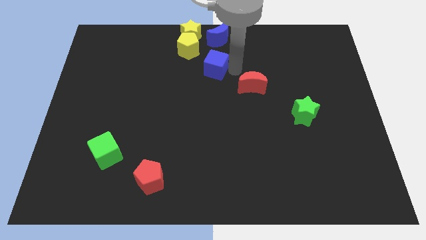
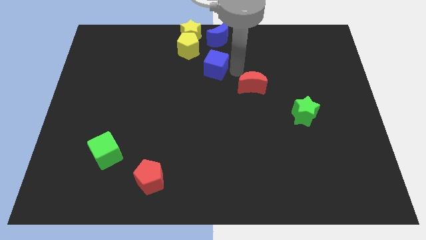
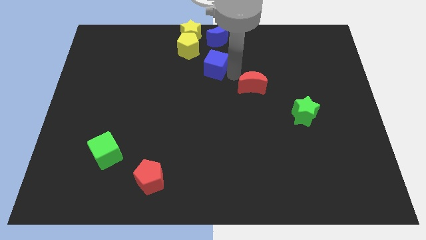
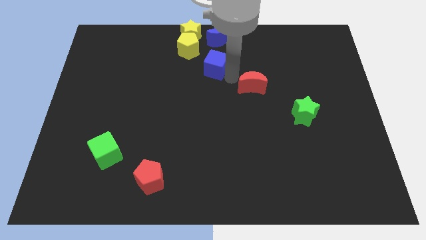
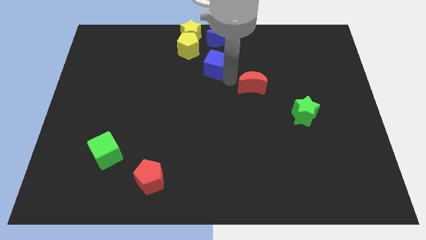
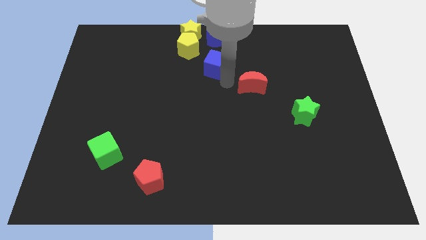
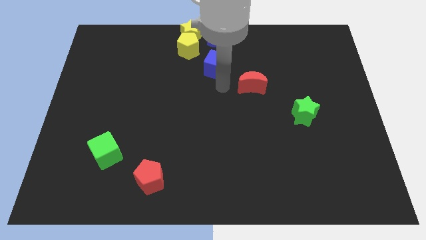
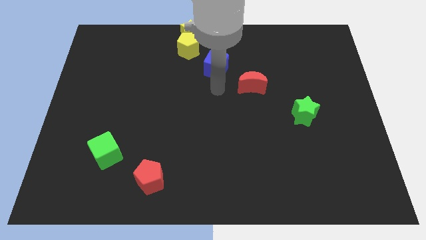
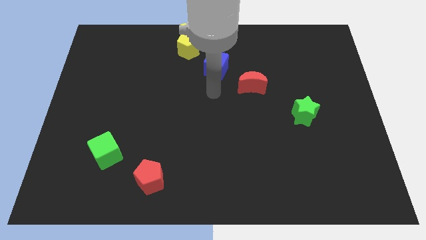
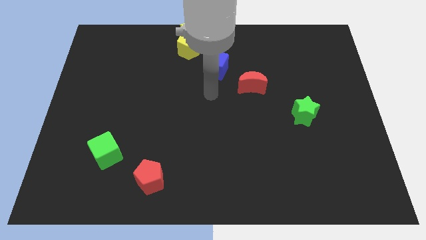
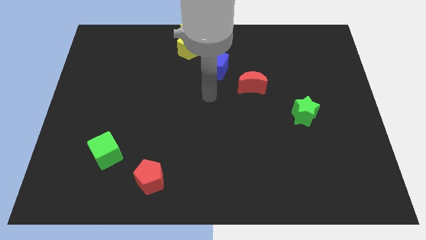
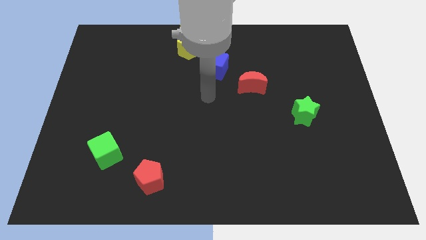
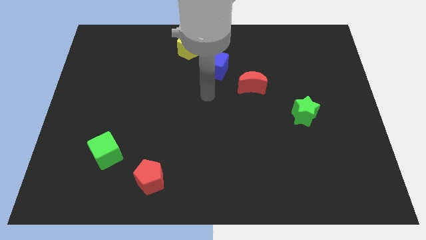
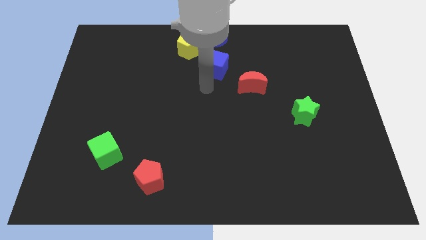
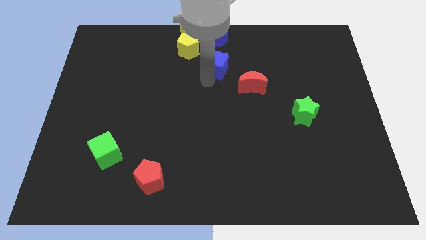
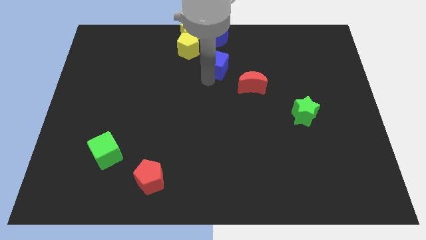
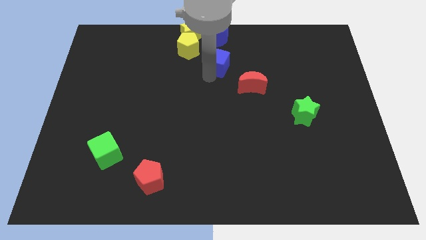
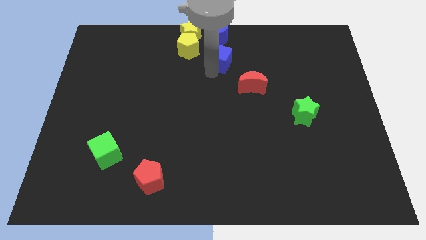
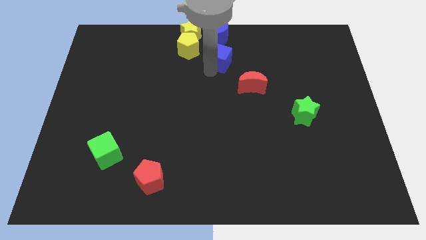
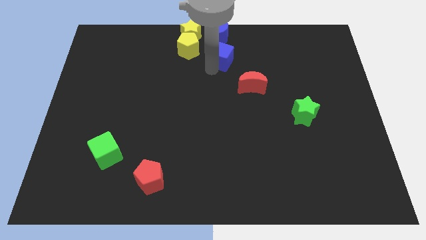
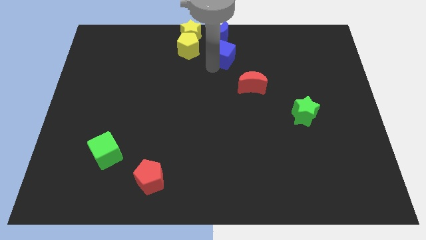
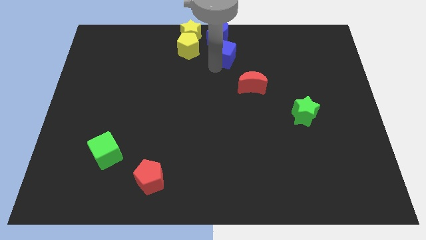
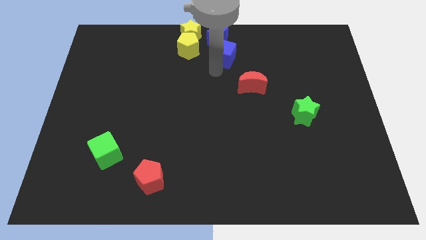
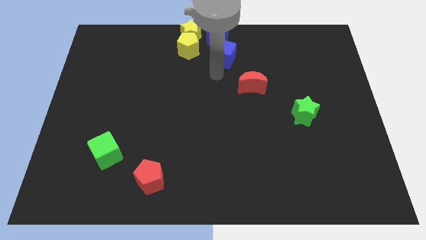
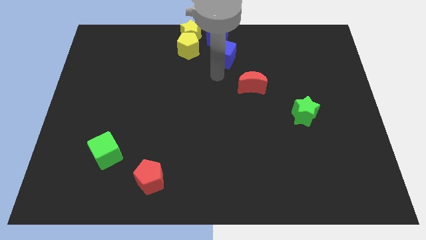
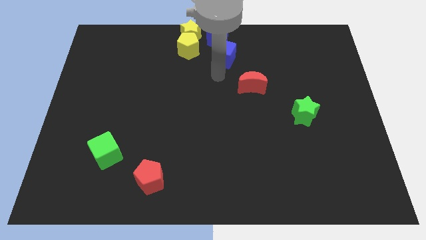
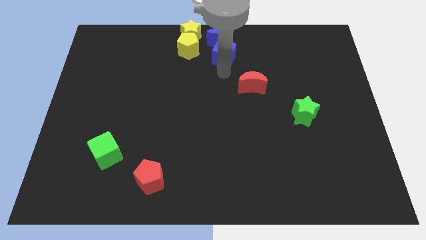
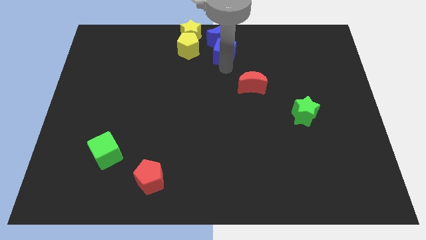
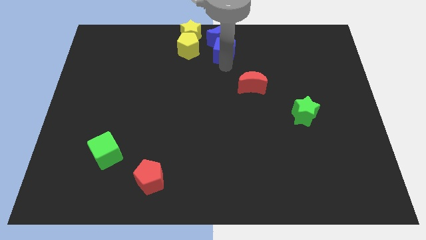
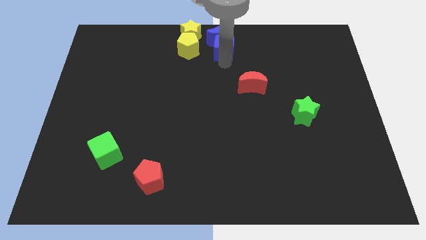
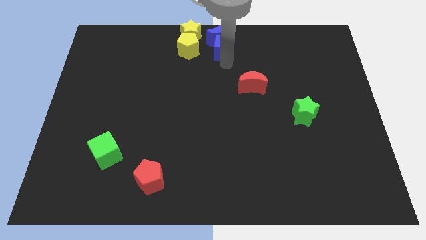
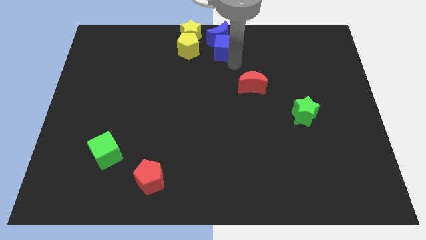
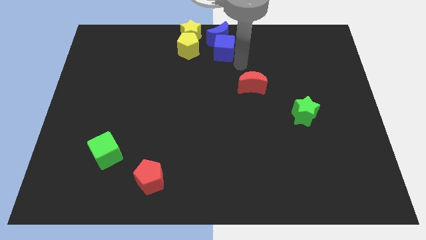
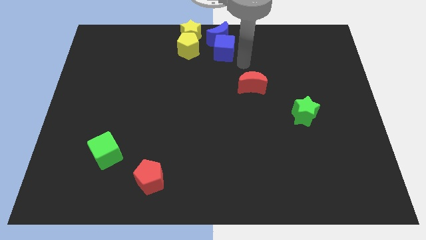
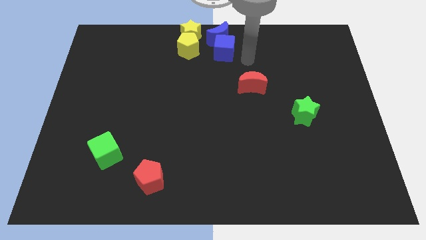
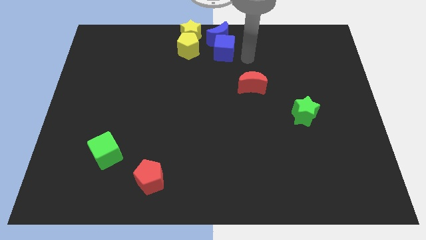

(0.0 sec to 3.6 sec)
push blue cube into blue moon

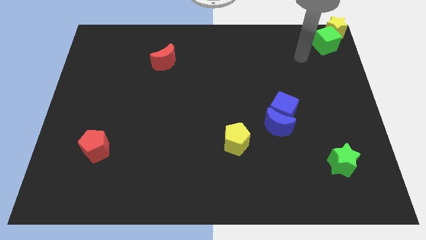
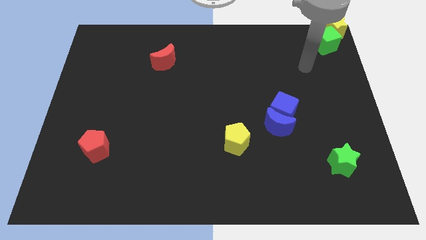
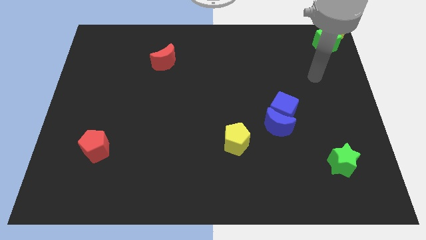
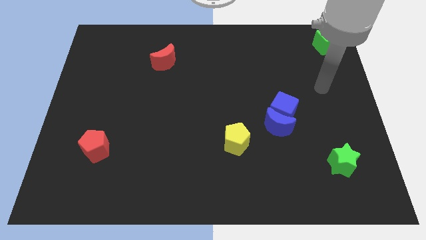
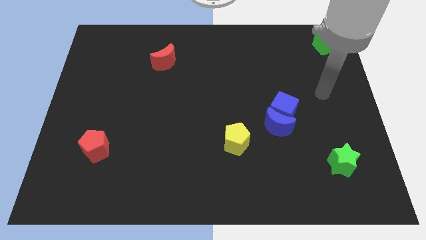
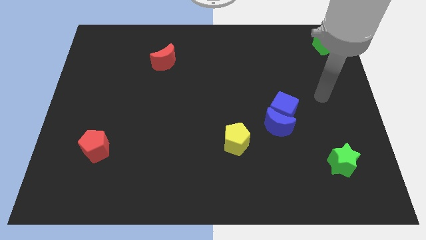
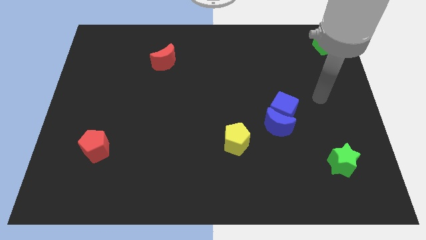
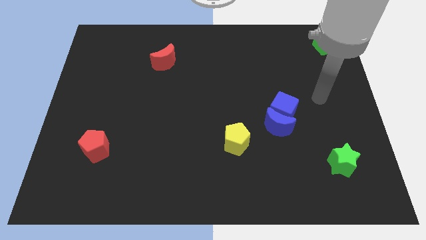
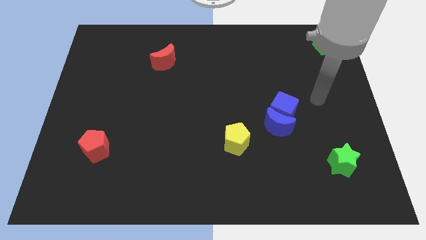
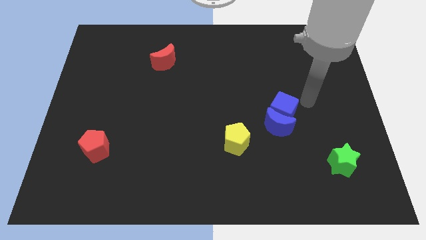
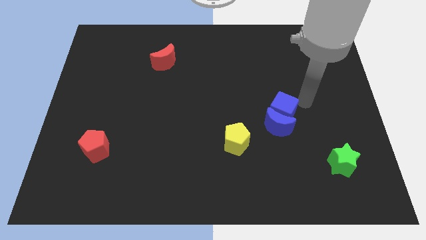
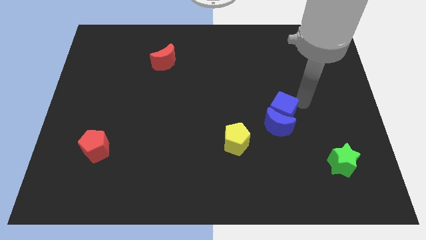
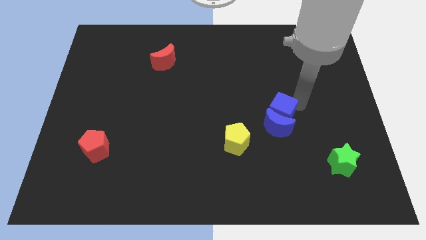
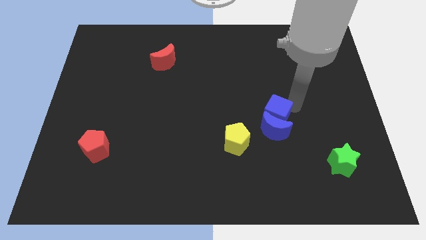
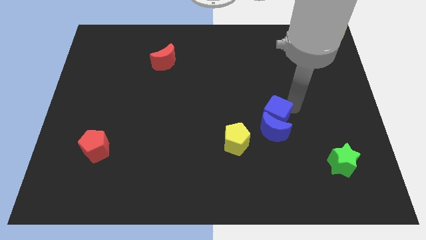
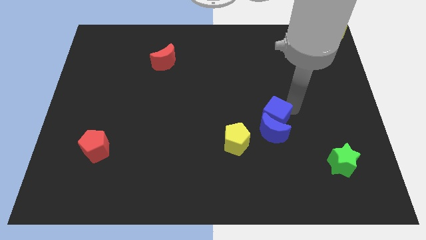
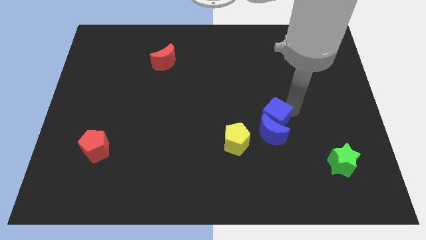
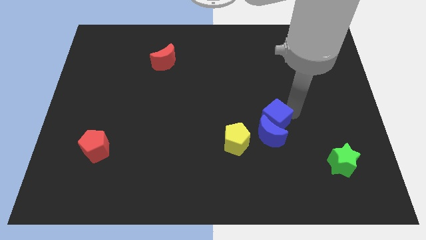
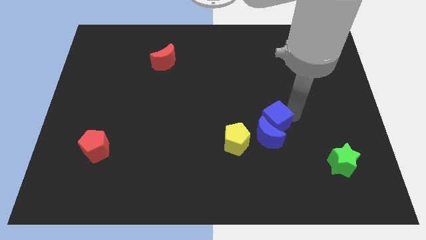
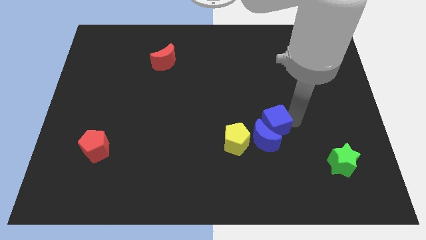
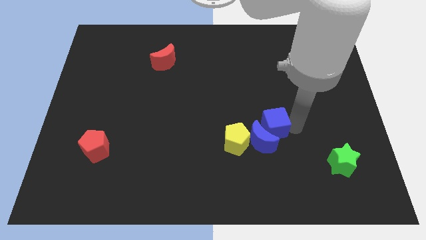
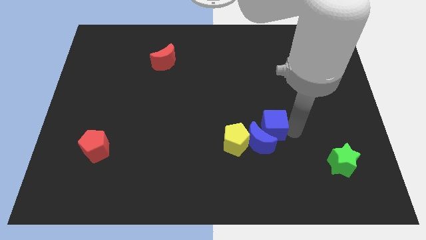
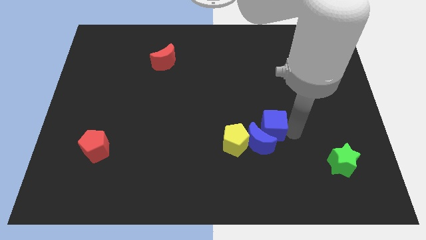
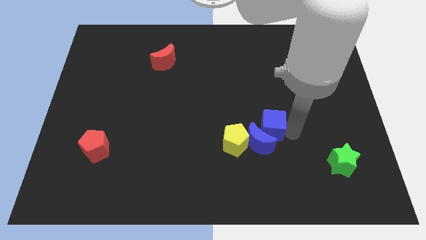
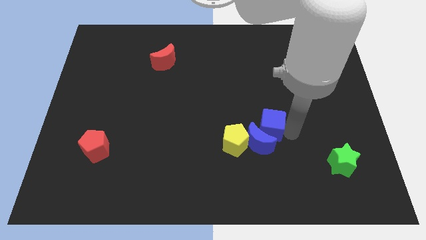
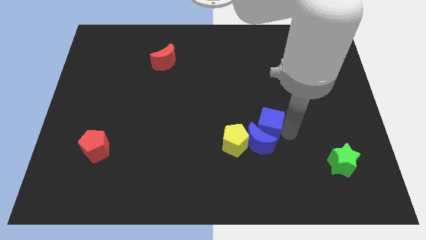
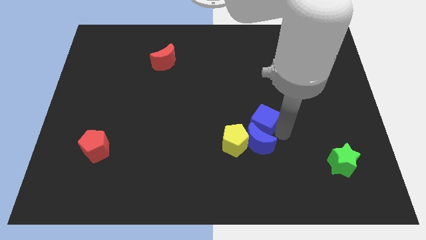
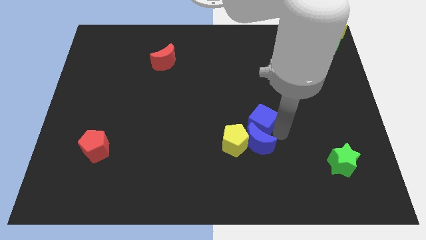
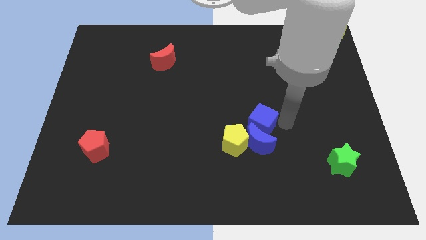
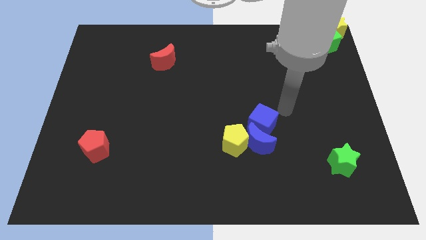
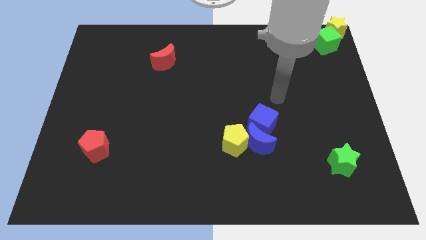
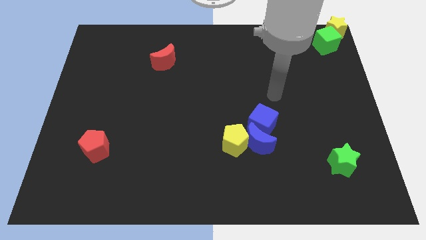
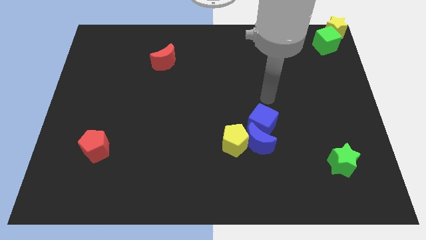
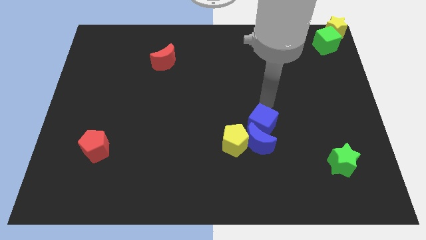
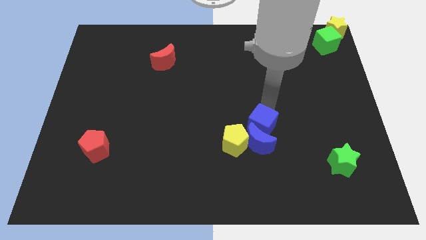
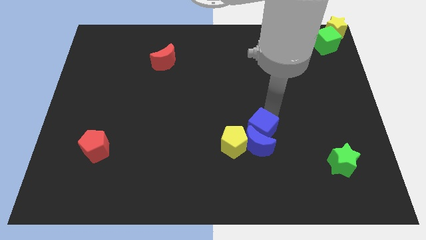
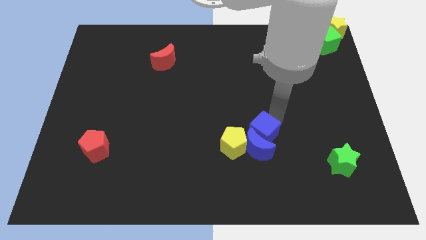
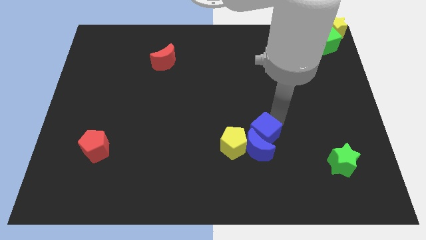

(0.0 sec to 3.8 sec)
push the blue cube into blue crescent

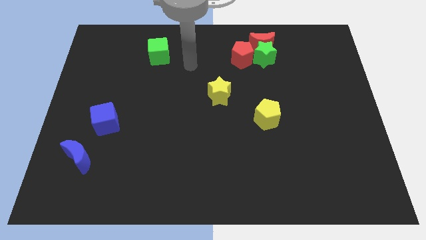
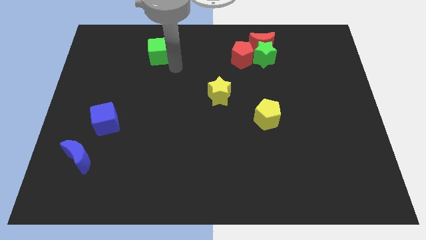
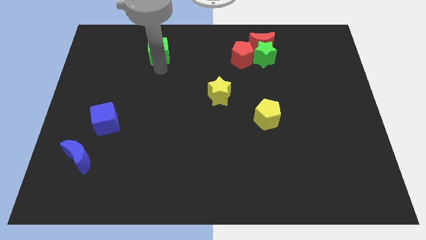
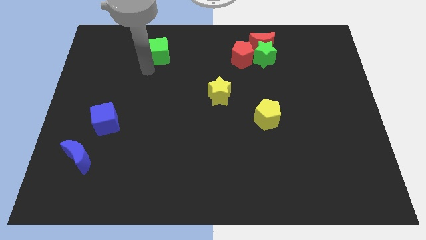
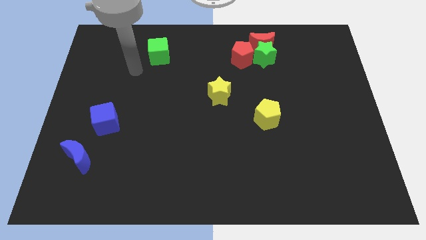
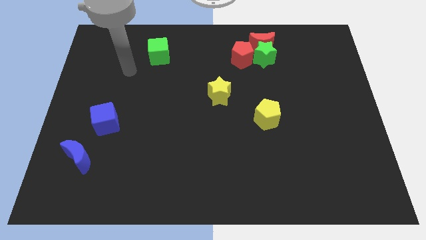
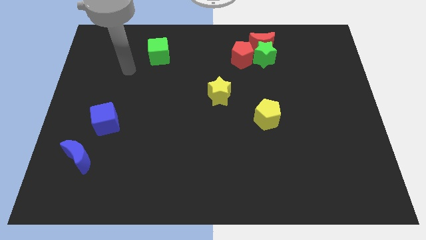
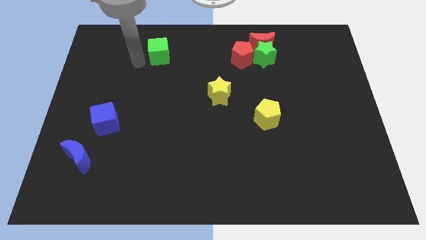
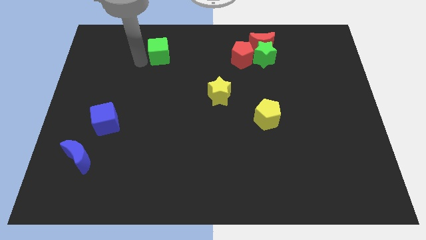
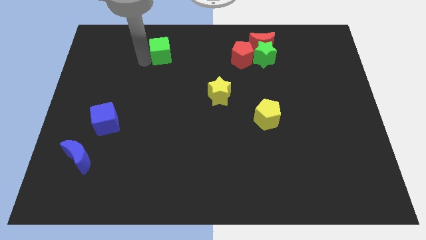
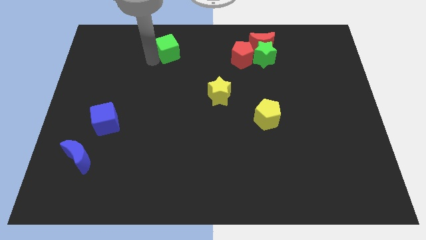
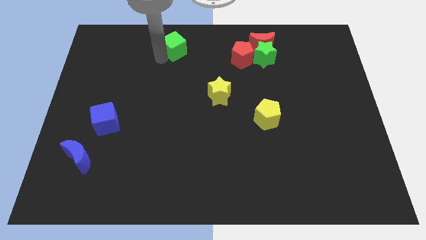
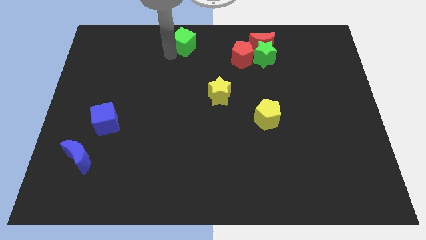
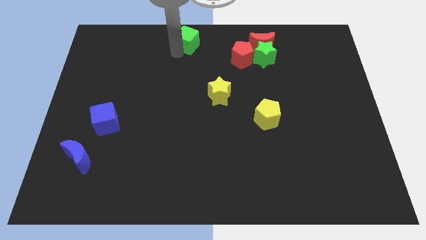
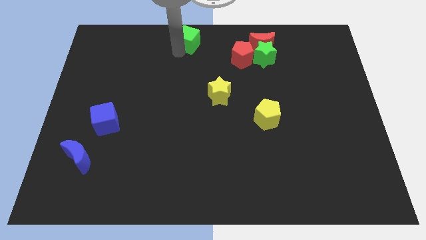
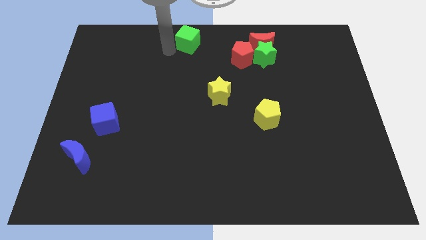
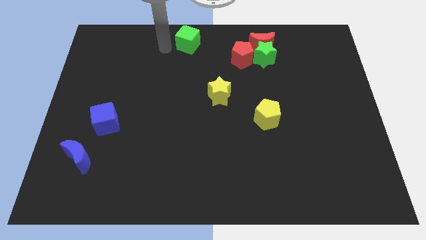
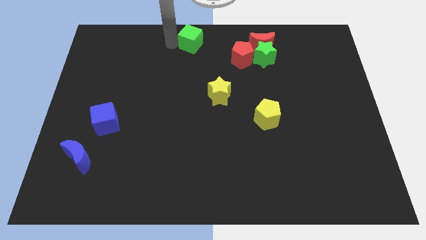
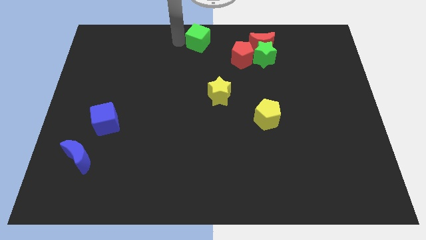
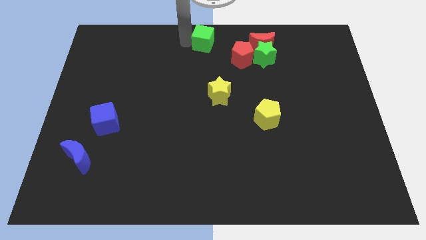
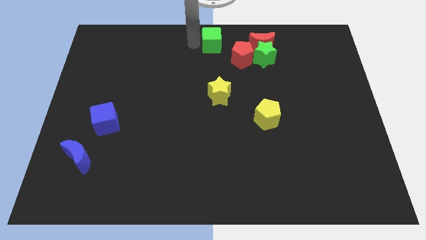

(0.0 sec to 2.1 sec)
push green cube to the top center
